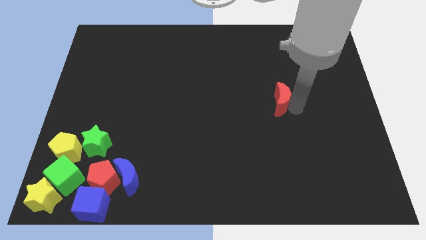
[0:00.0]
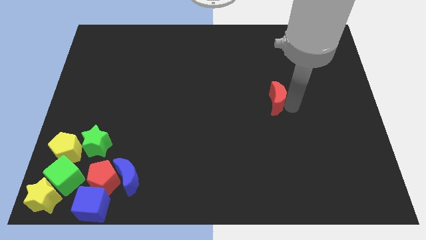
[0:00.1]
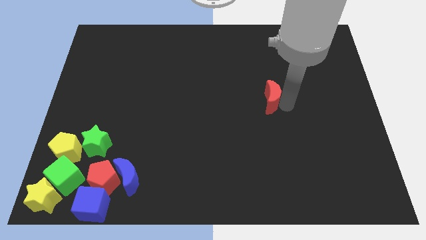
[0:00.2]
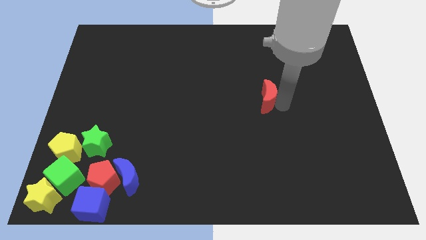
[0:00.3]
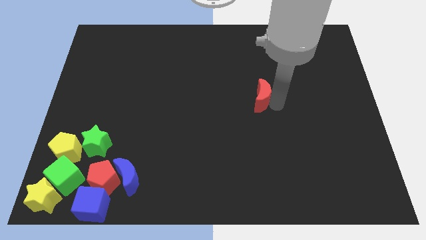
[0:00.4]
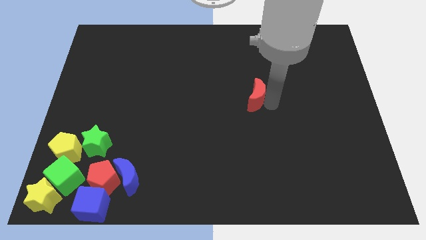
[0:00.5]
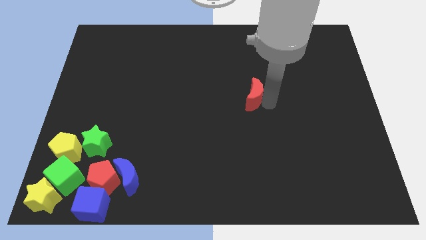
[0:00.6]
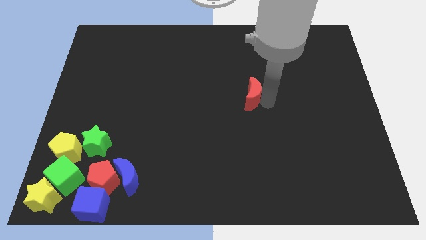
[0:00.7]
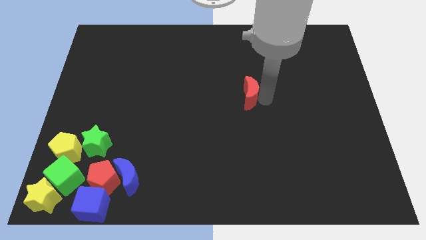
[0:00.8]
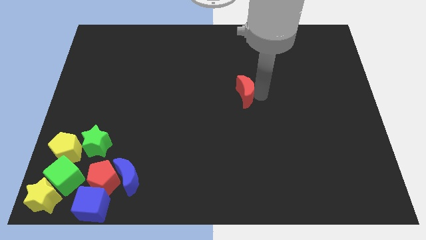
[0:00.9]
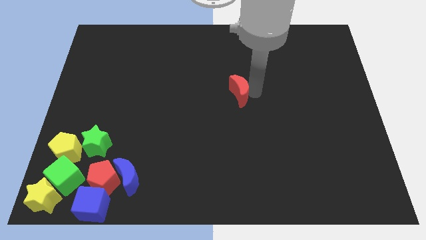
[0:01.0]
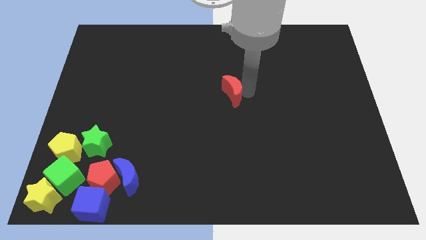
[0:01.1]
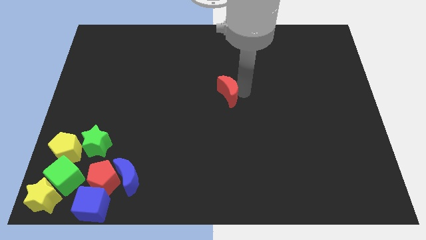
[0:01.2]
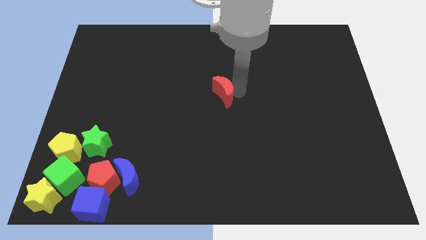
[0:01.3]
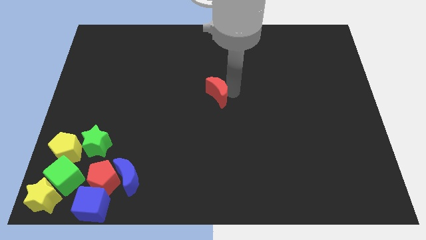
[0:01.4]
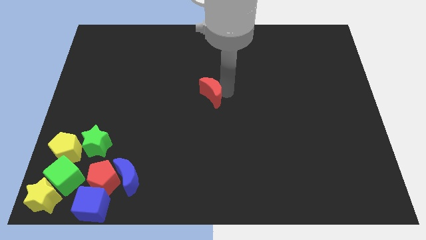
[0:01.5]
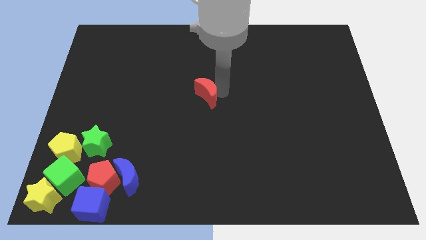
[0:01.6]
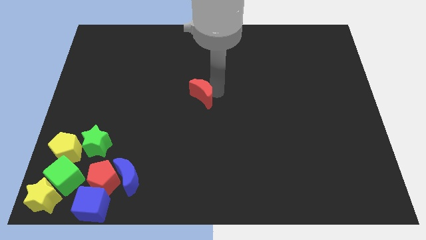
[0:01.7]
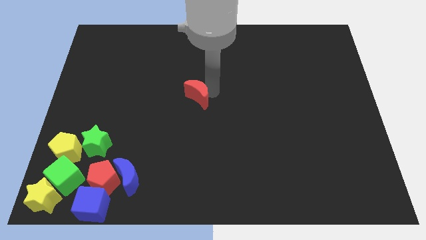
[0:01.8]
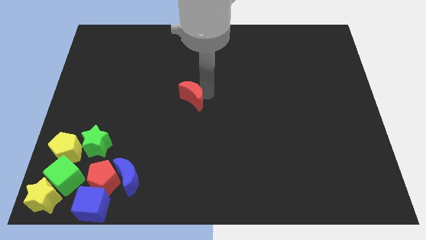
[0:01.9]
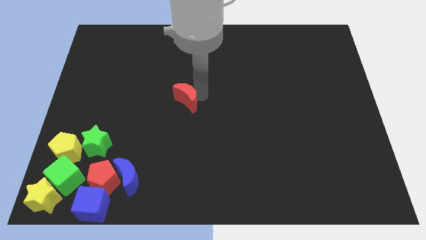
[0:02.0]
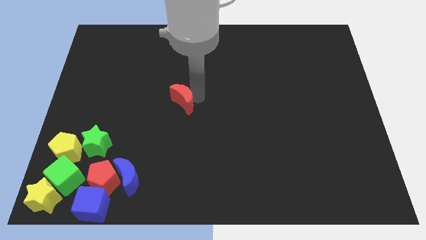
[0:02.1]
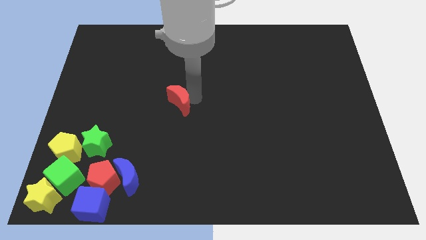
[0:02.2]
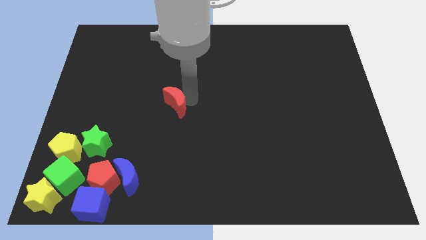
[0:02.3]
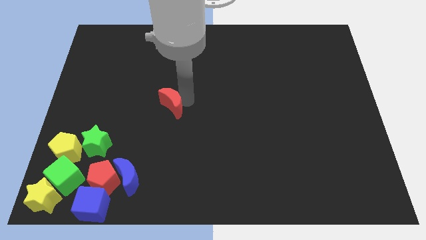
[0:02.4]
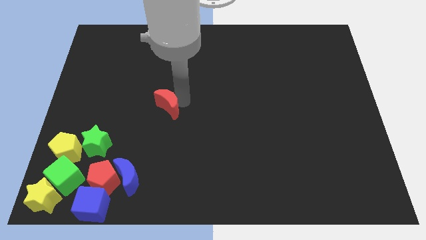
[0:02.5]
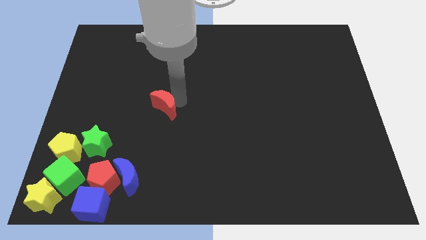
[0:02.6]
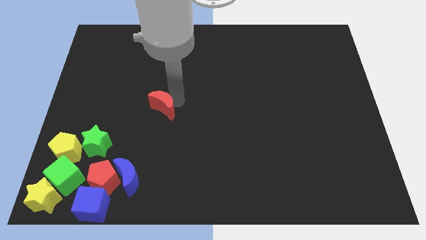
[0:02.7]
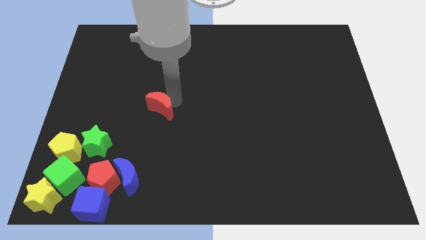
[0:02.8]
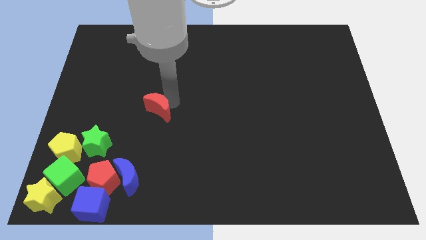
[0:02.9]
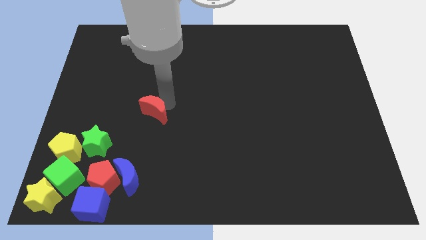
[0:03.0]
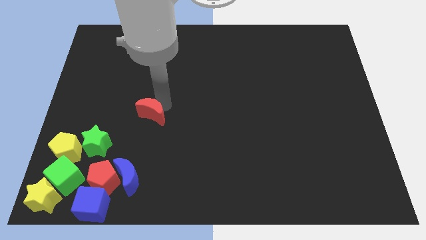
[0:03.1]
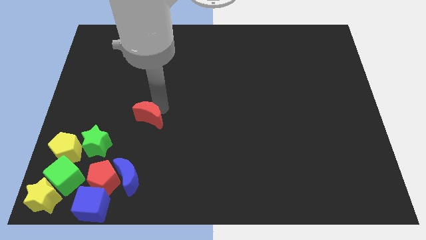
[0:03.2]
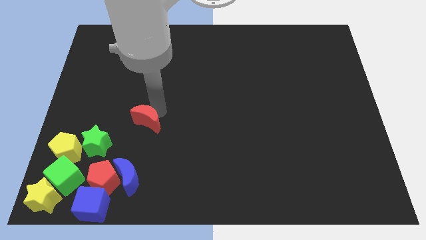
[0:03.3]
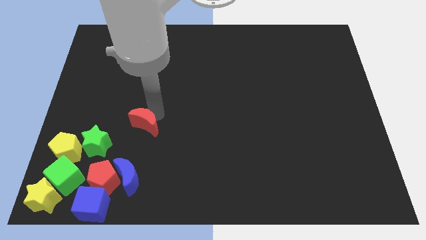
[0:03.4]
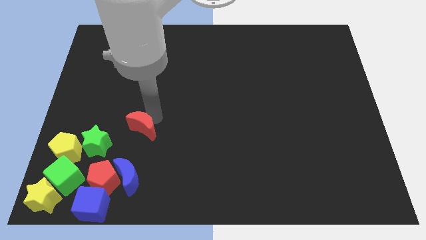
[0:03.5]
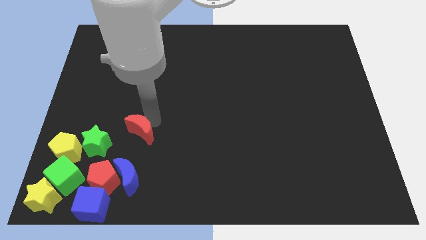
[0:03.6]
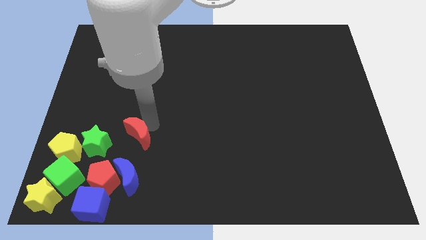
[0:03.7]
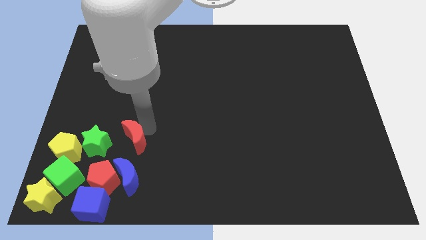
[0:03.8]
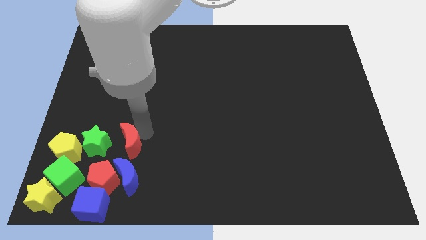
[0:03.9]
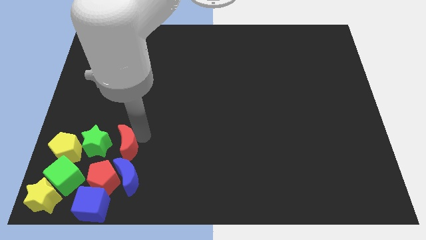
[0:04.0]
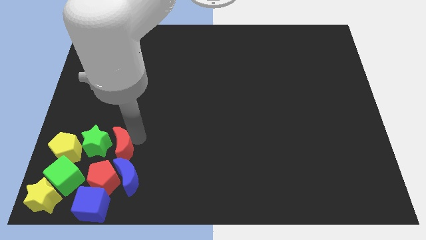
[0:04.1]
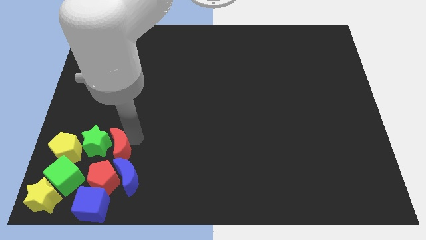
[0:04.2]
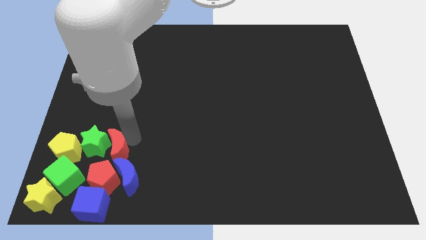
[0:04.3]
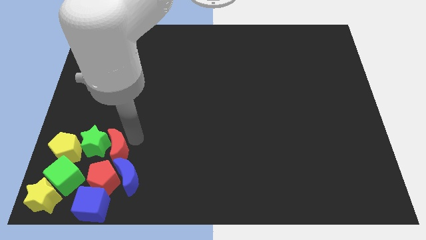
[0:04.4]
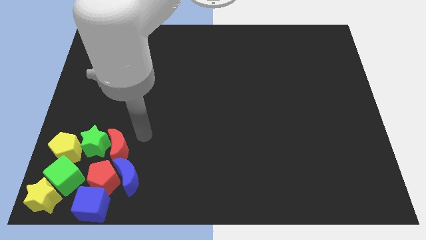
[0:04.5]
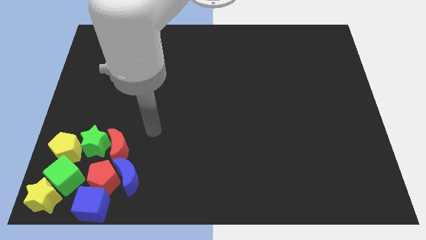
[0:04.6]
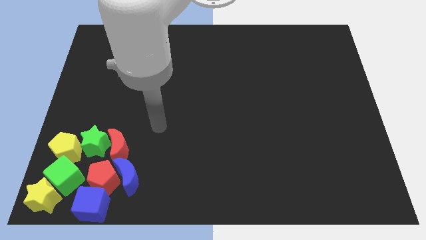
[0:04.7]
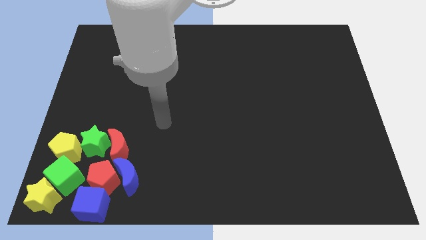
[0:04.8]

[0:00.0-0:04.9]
place the red moon to the top of the blue moon

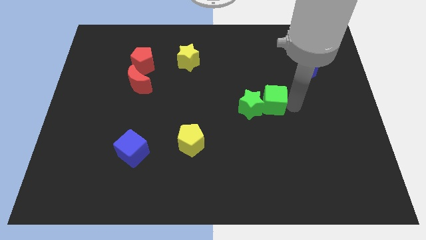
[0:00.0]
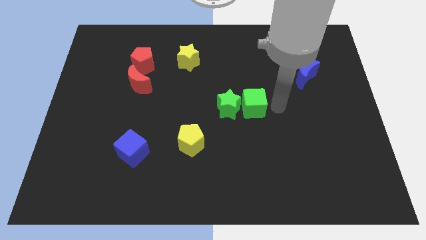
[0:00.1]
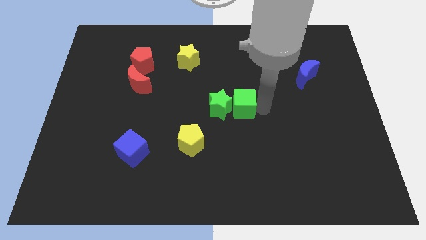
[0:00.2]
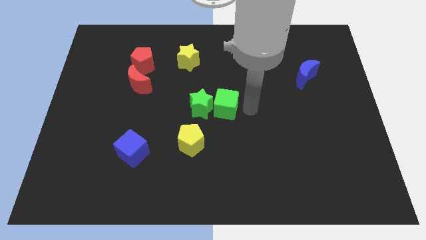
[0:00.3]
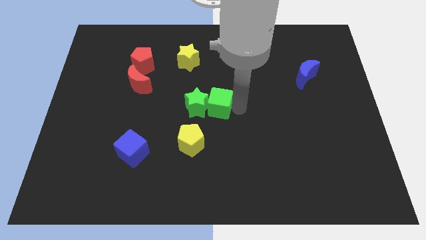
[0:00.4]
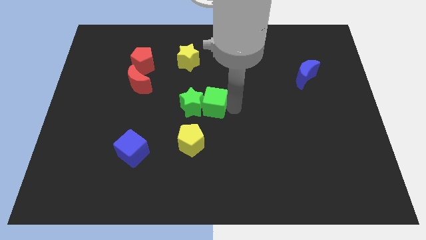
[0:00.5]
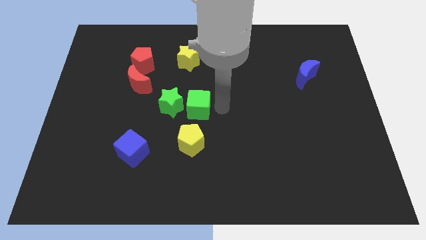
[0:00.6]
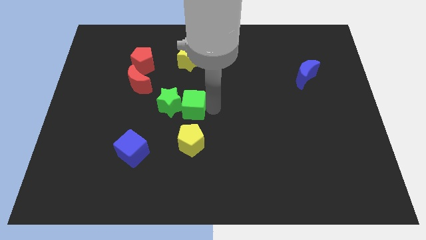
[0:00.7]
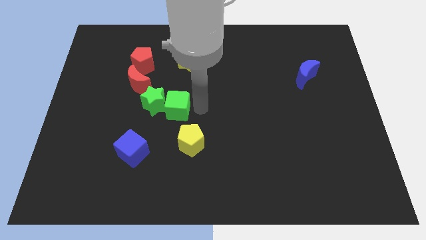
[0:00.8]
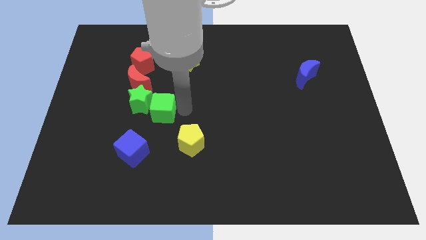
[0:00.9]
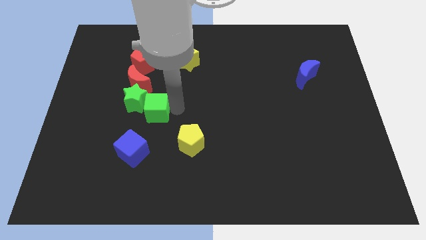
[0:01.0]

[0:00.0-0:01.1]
move green star below red moon

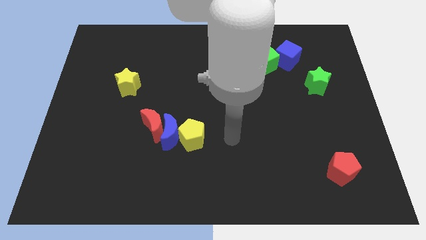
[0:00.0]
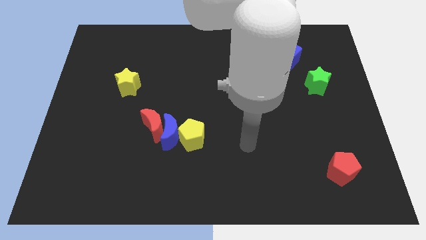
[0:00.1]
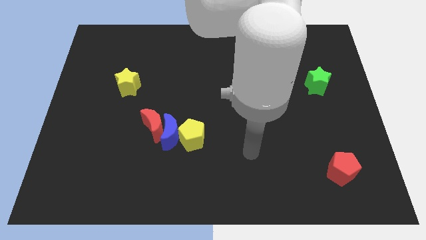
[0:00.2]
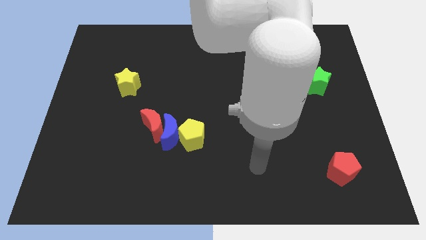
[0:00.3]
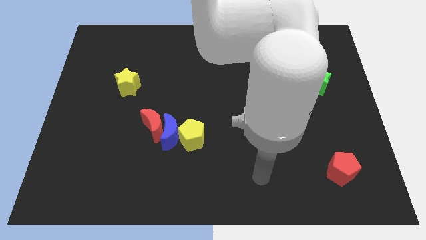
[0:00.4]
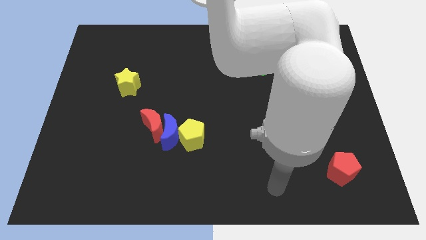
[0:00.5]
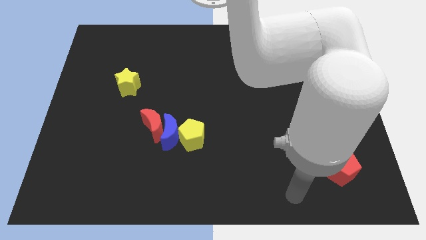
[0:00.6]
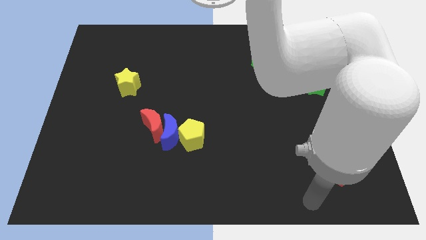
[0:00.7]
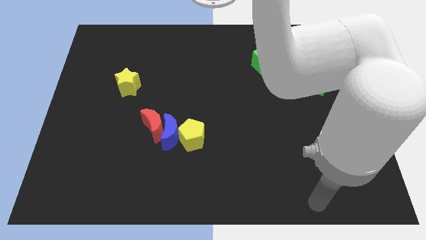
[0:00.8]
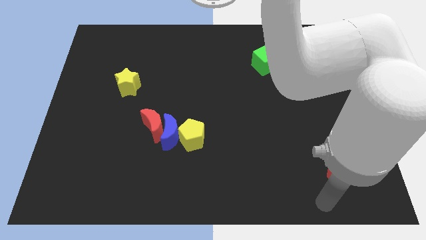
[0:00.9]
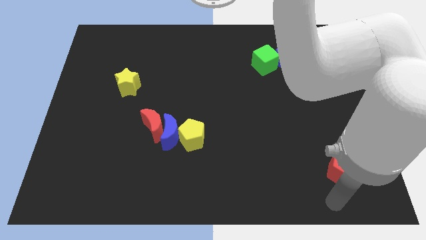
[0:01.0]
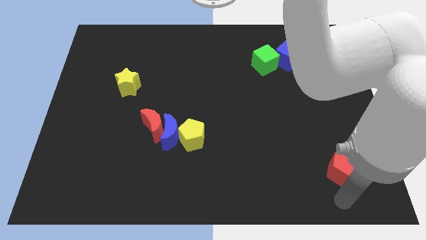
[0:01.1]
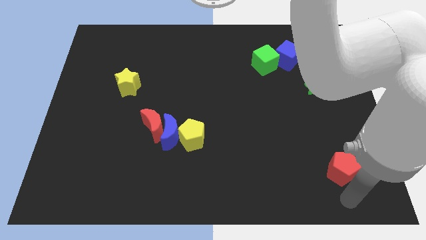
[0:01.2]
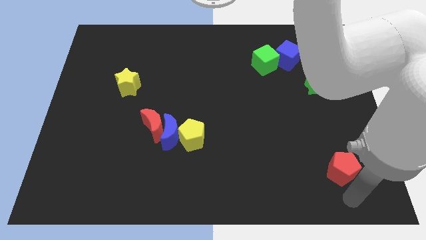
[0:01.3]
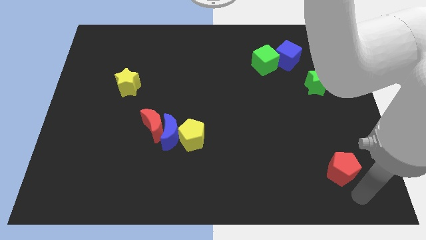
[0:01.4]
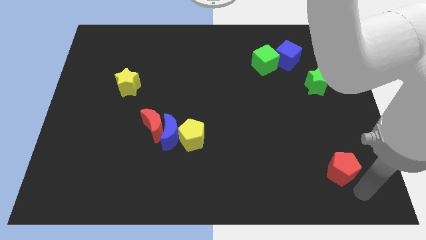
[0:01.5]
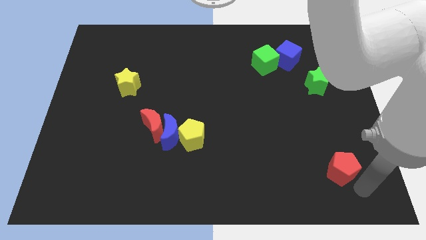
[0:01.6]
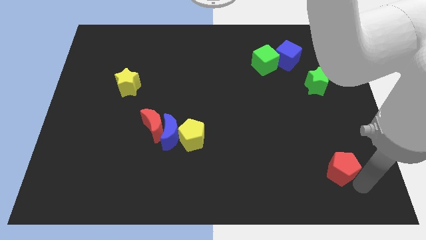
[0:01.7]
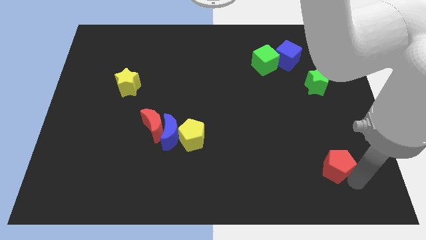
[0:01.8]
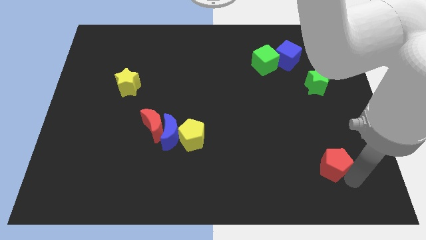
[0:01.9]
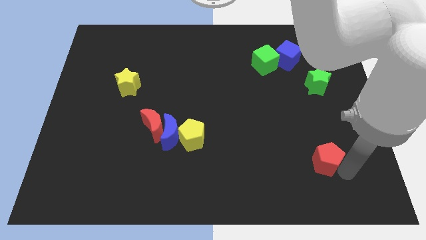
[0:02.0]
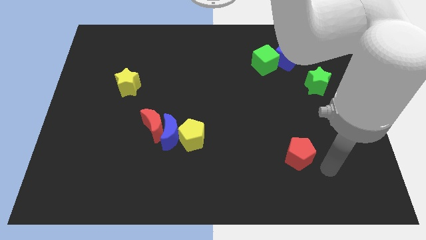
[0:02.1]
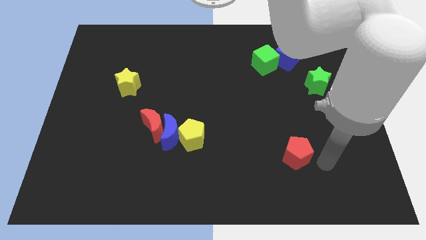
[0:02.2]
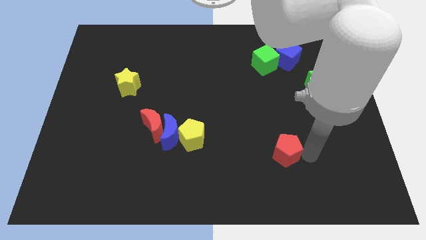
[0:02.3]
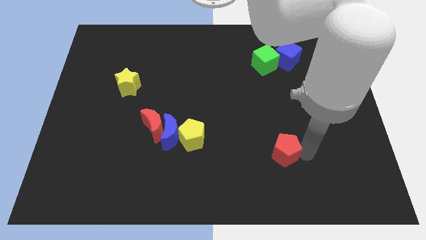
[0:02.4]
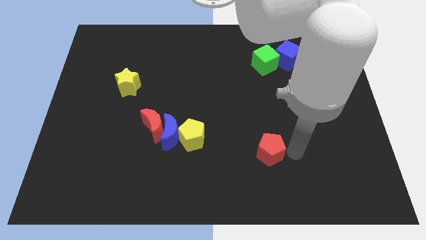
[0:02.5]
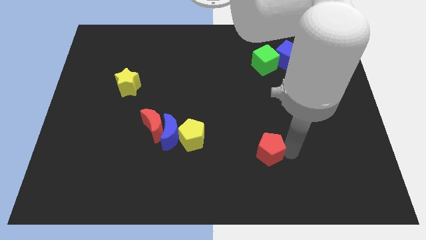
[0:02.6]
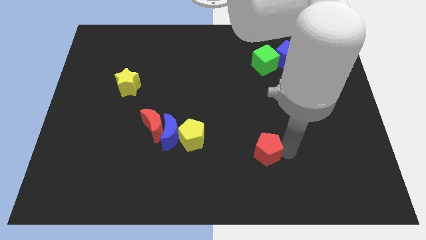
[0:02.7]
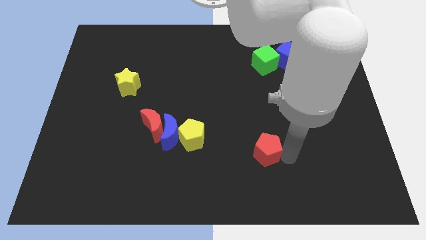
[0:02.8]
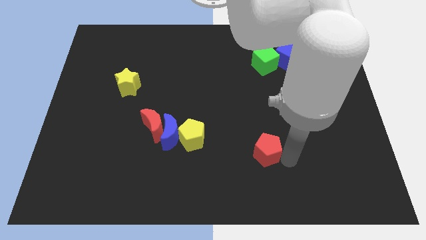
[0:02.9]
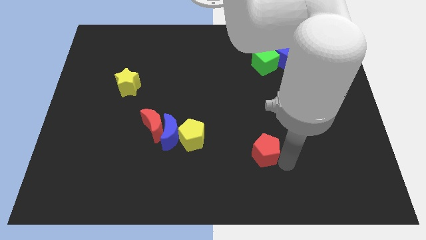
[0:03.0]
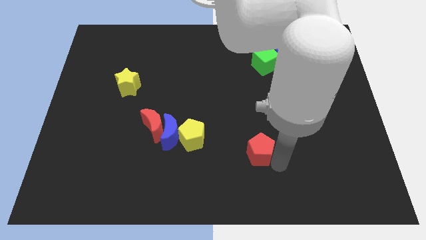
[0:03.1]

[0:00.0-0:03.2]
push the red pentagon to the center of the board
